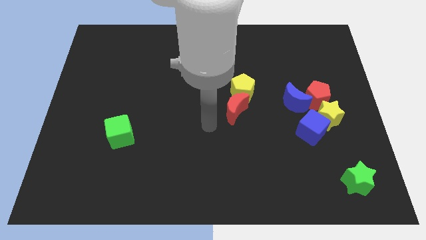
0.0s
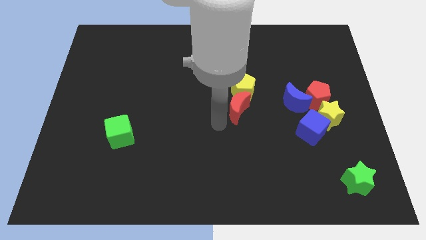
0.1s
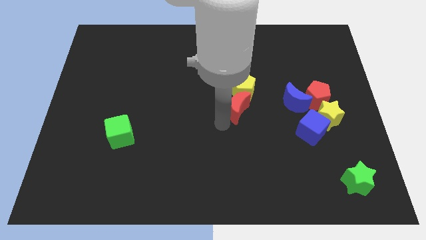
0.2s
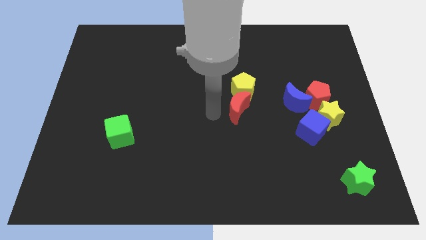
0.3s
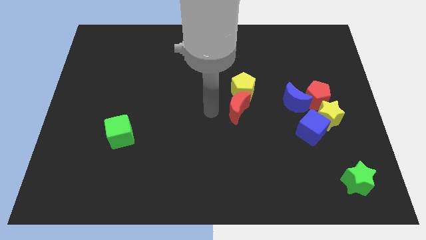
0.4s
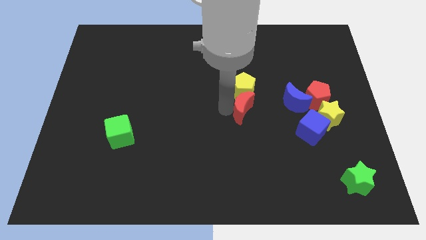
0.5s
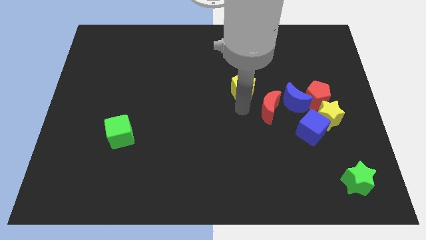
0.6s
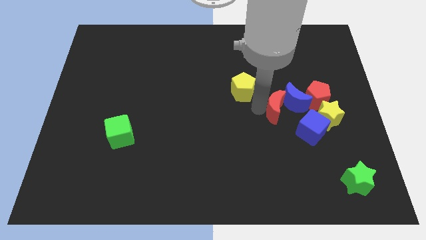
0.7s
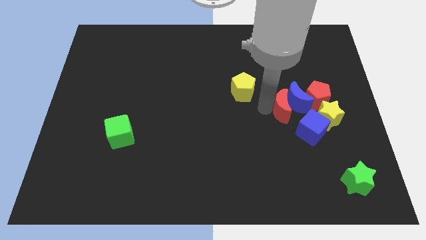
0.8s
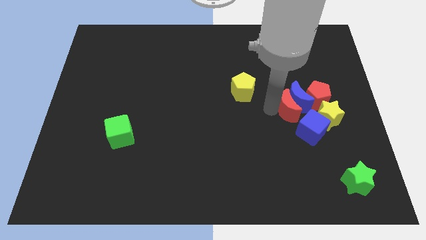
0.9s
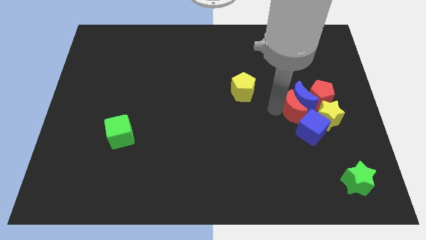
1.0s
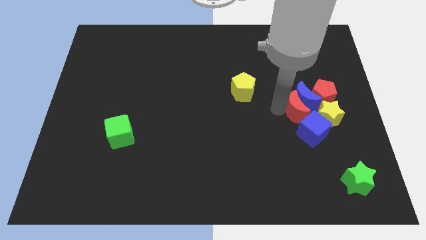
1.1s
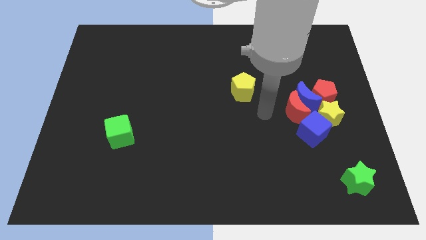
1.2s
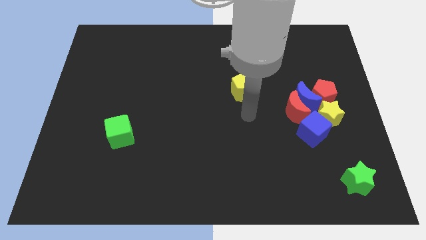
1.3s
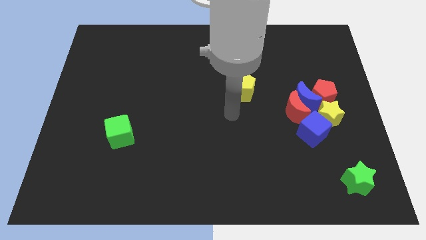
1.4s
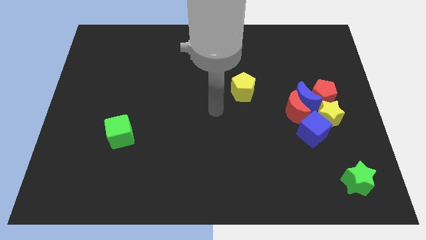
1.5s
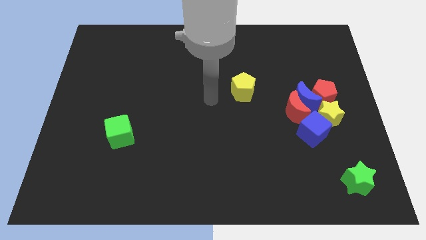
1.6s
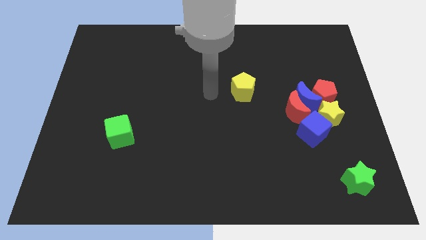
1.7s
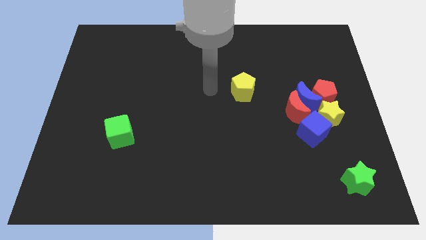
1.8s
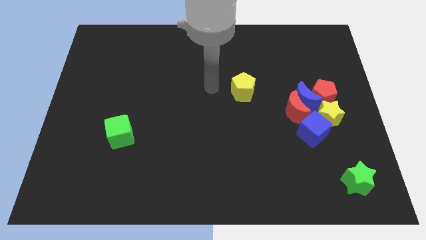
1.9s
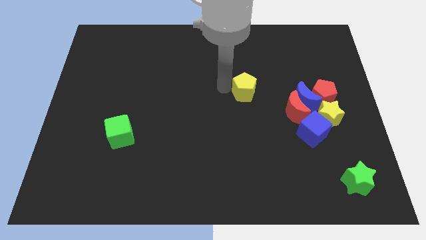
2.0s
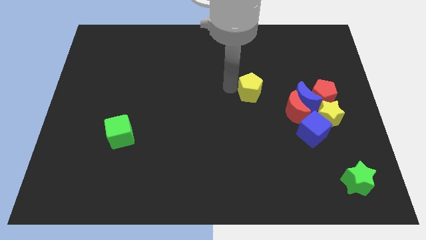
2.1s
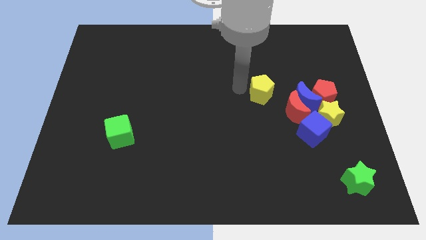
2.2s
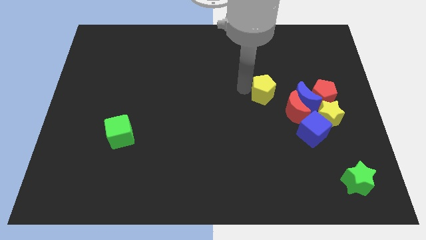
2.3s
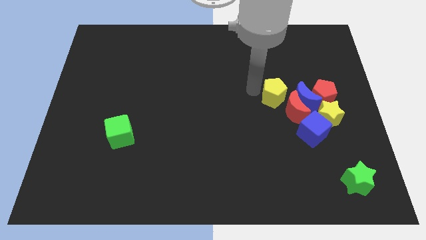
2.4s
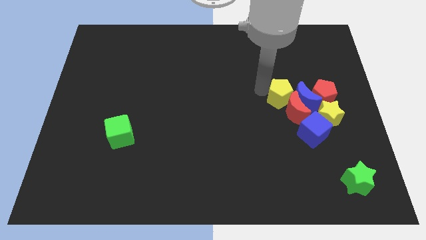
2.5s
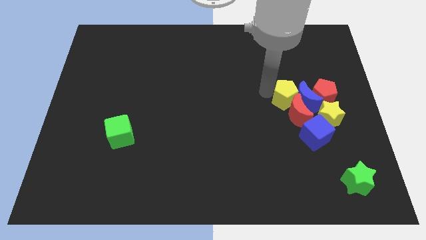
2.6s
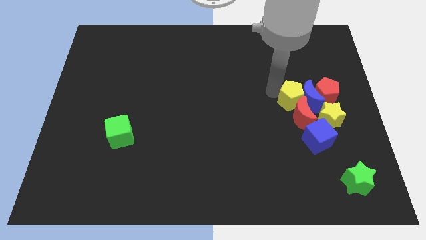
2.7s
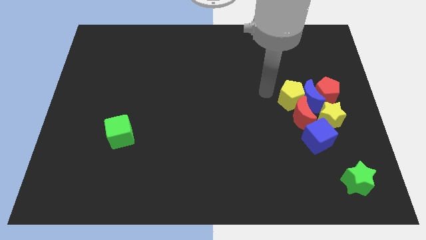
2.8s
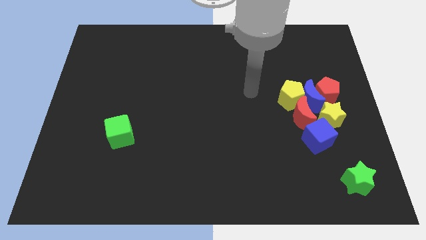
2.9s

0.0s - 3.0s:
push the red crescent into blue crescent

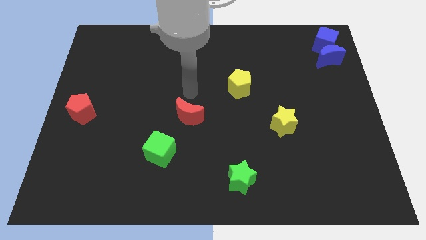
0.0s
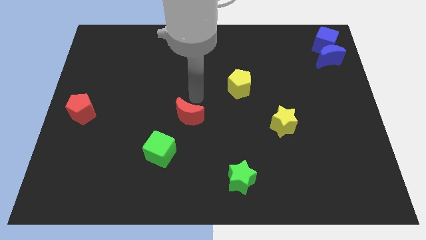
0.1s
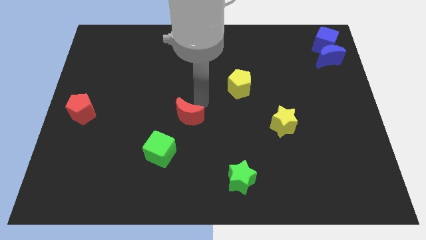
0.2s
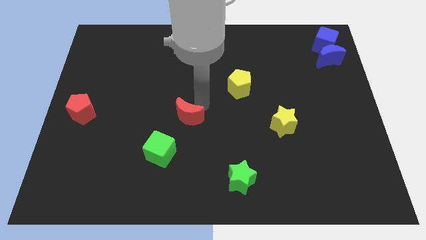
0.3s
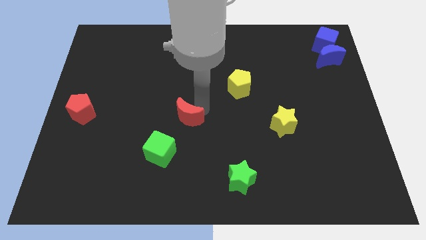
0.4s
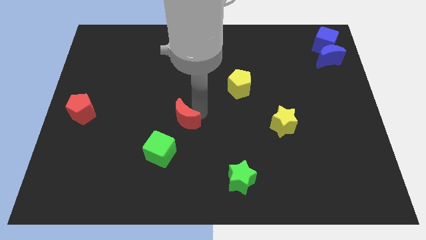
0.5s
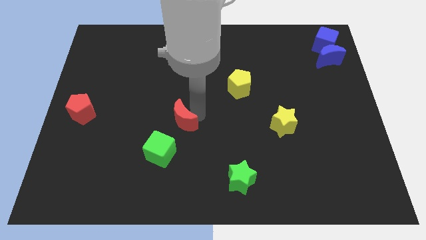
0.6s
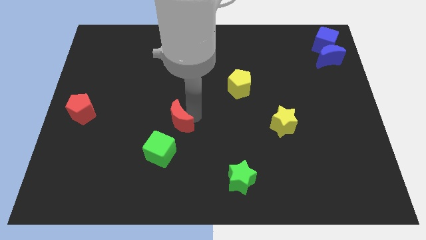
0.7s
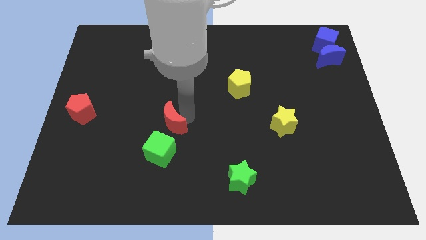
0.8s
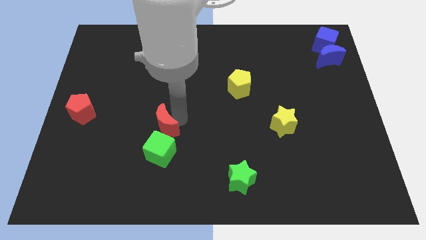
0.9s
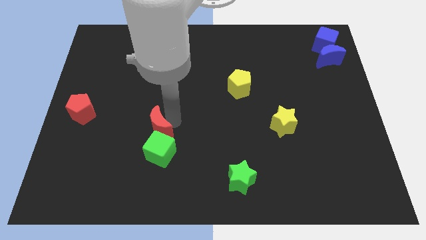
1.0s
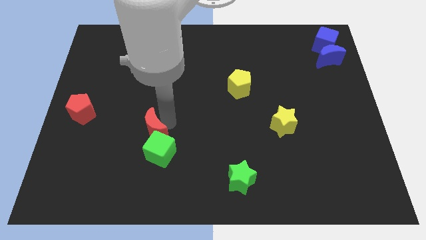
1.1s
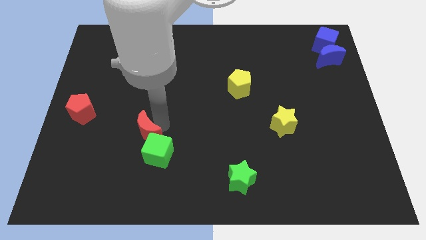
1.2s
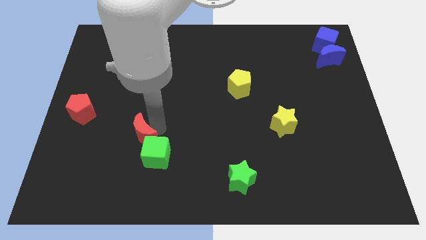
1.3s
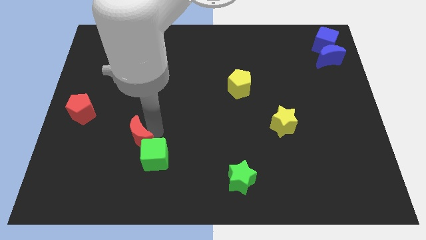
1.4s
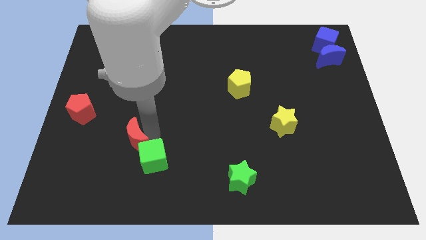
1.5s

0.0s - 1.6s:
slide the red moon into the green cube

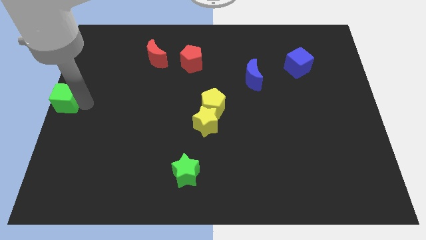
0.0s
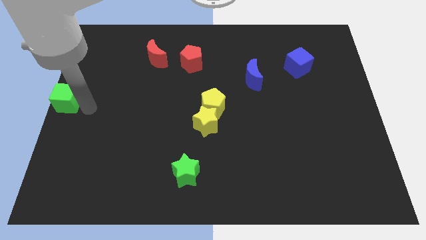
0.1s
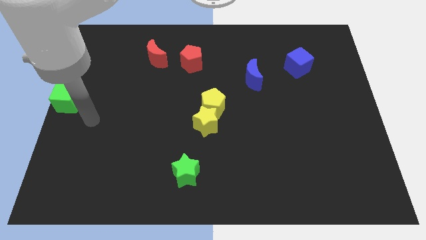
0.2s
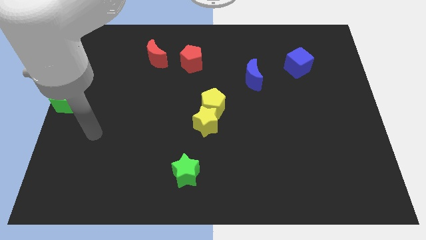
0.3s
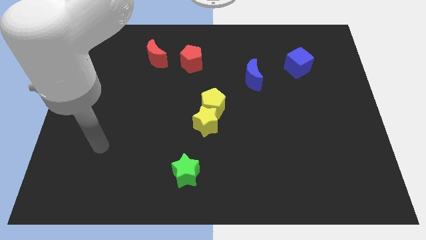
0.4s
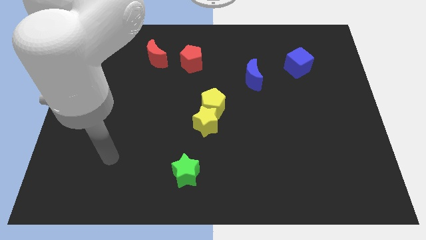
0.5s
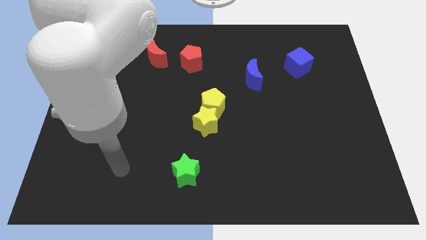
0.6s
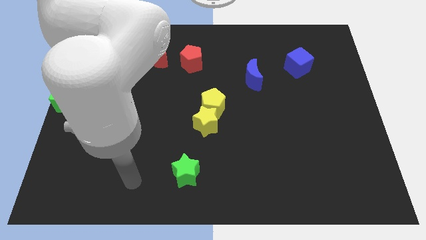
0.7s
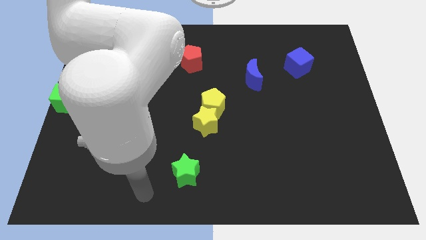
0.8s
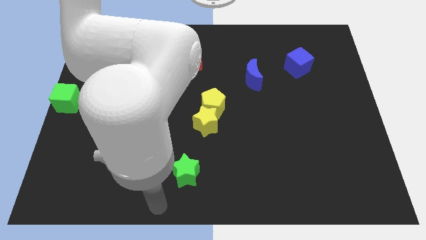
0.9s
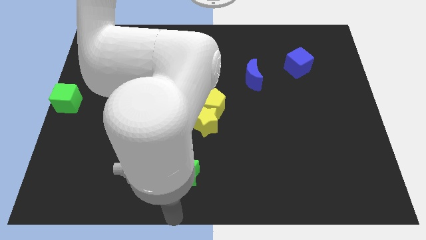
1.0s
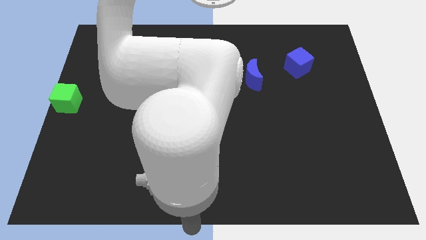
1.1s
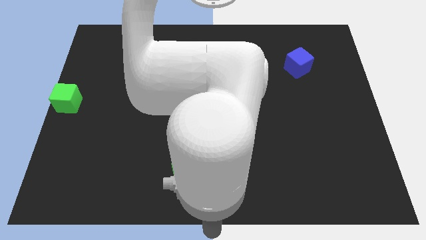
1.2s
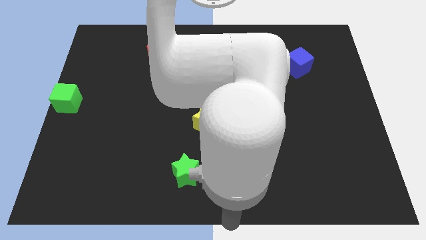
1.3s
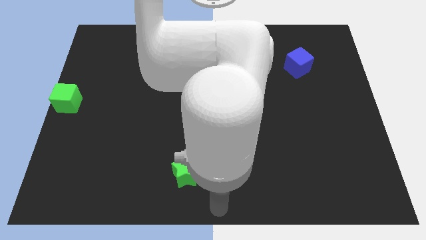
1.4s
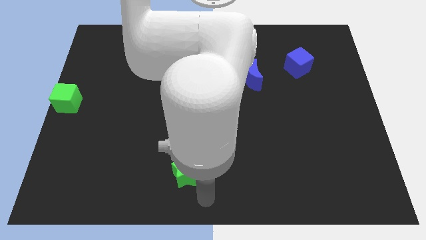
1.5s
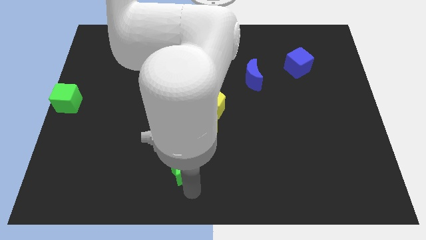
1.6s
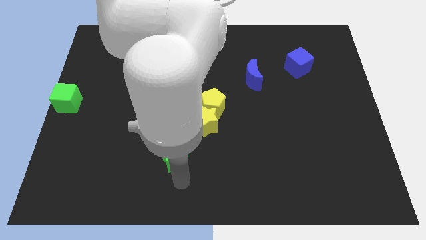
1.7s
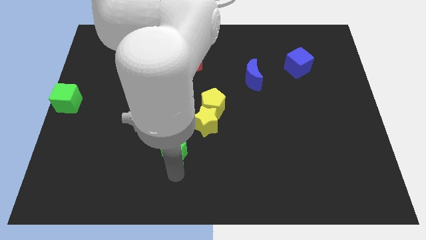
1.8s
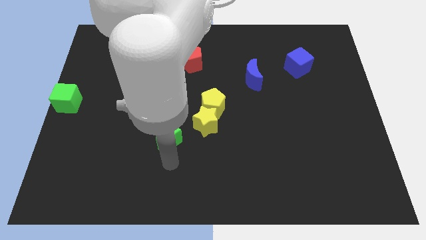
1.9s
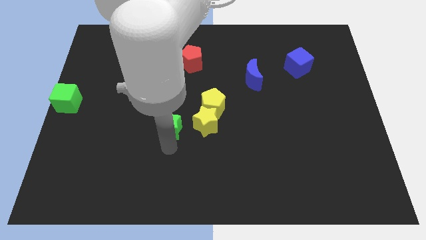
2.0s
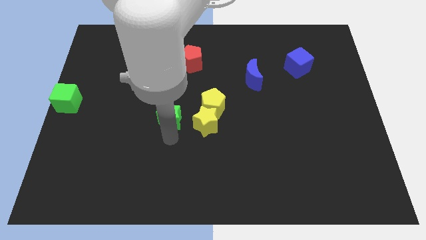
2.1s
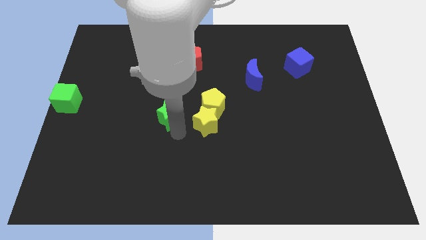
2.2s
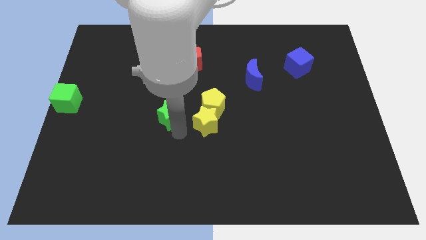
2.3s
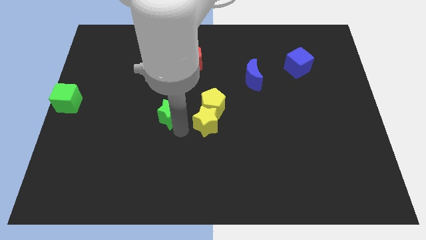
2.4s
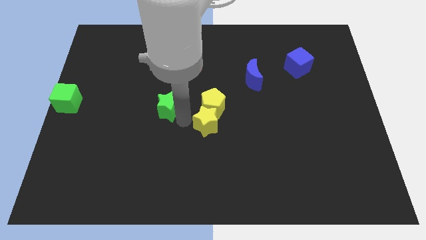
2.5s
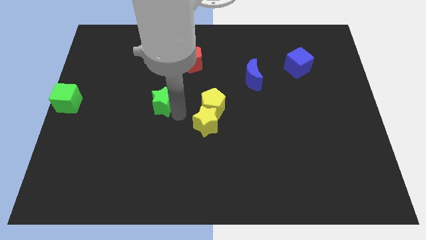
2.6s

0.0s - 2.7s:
place green star in between the green cube and the yellow star

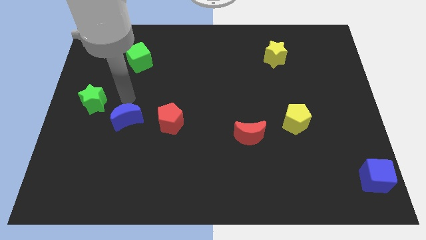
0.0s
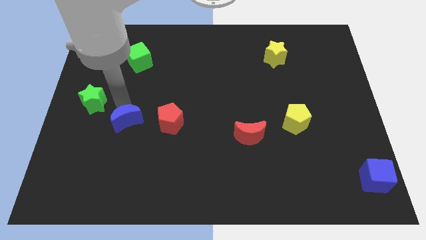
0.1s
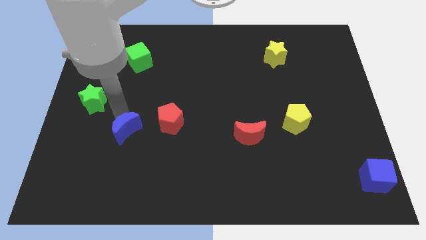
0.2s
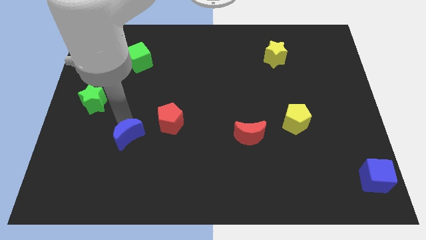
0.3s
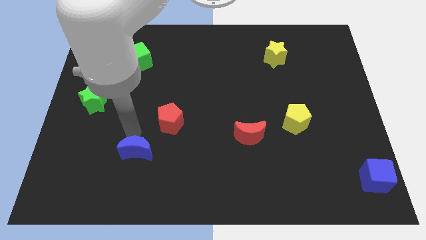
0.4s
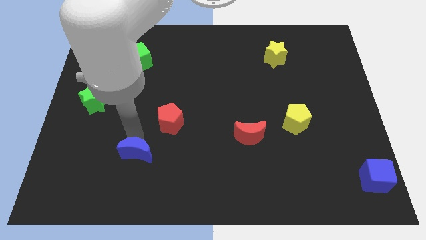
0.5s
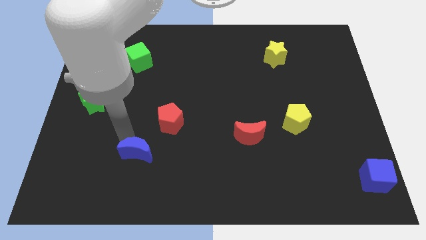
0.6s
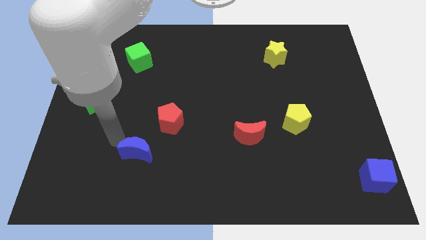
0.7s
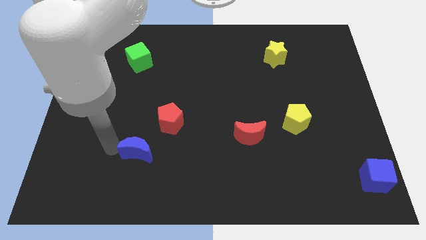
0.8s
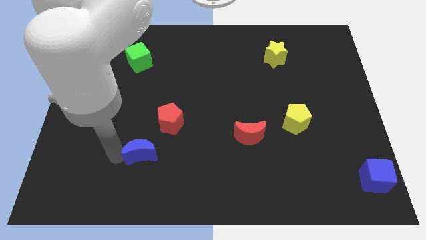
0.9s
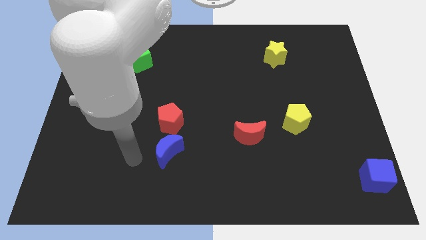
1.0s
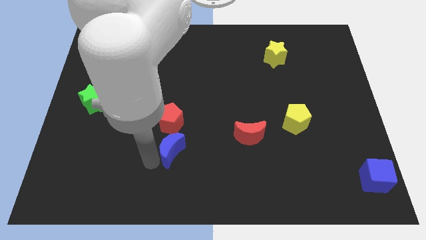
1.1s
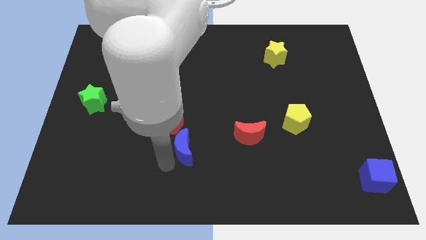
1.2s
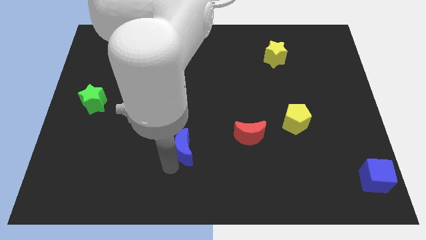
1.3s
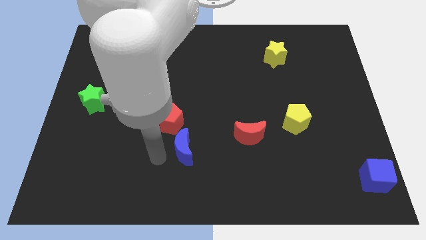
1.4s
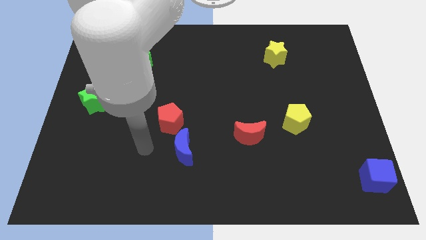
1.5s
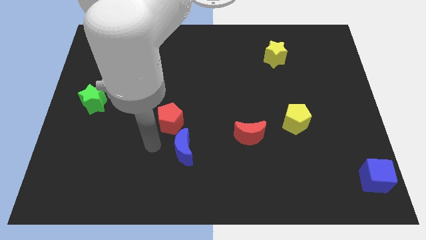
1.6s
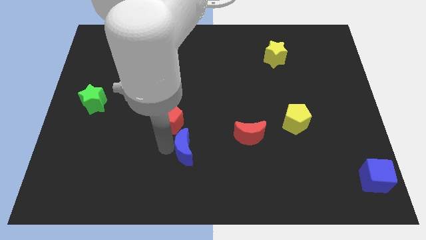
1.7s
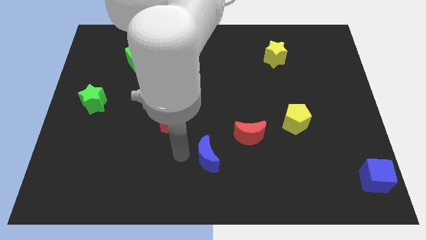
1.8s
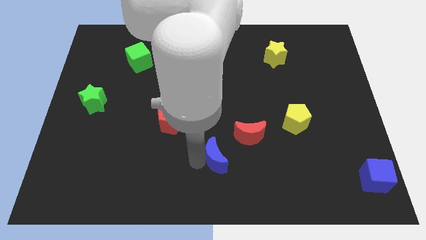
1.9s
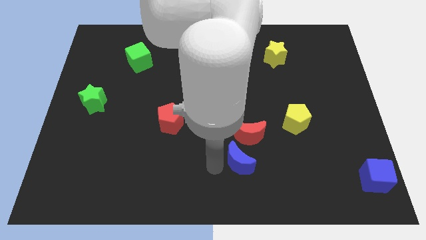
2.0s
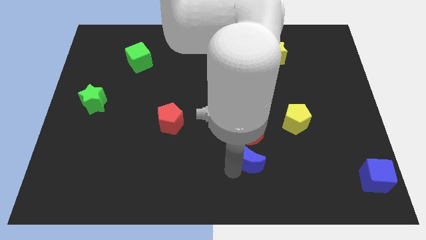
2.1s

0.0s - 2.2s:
move the blue moon below the red moon
